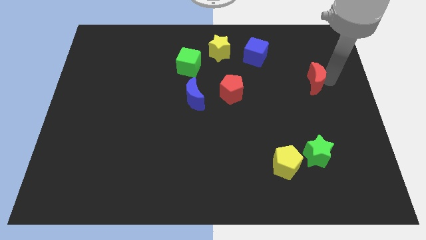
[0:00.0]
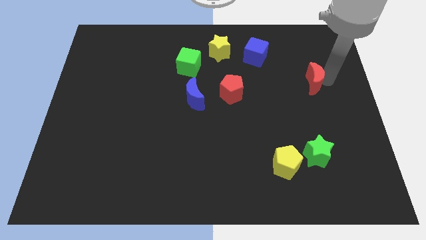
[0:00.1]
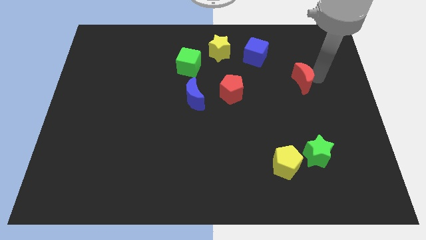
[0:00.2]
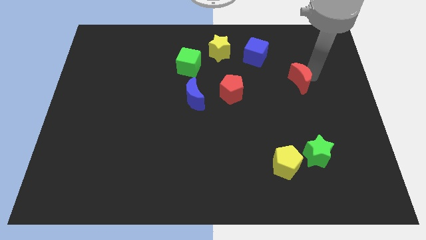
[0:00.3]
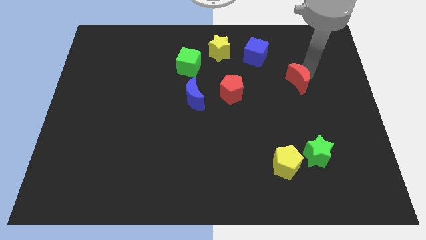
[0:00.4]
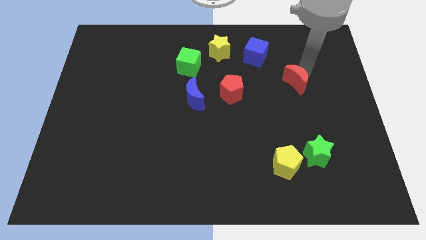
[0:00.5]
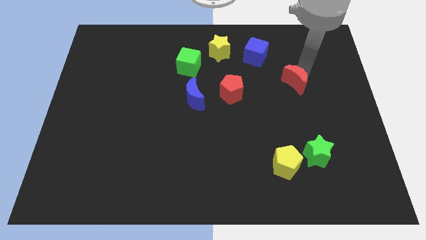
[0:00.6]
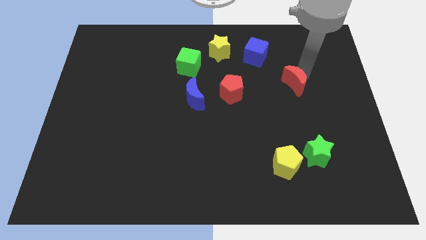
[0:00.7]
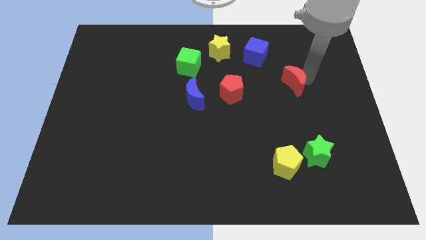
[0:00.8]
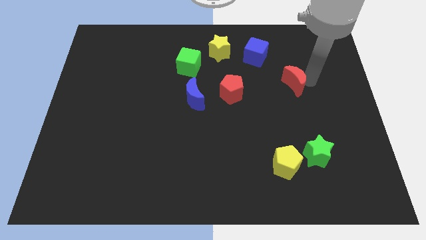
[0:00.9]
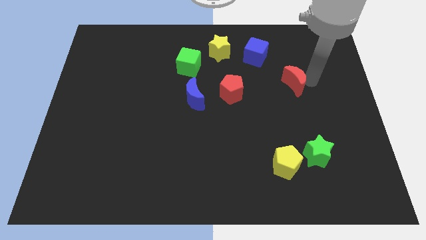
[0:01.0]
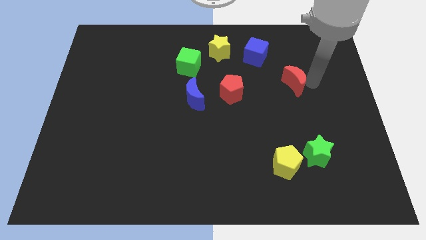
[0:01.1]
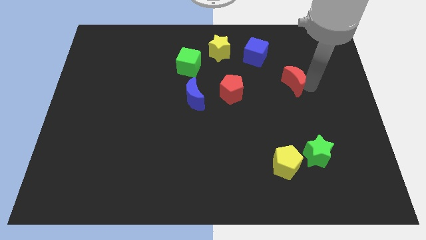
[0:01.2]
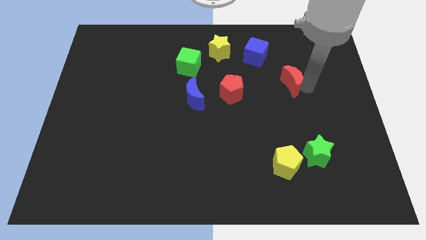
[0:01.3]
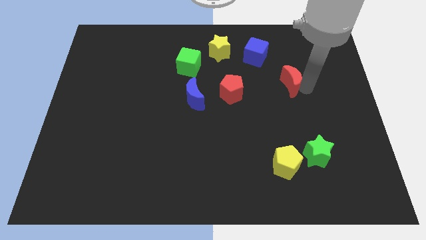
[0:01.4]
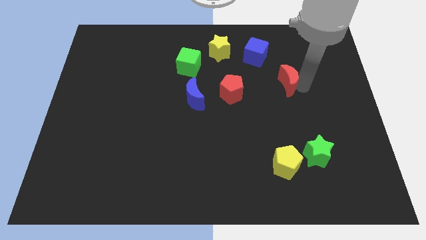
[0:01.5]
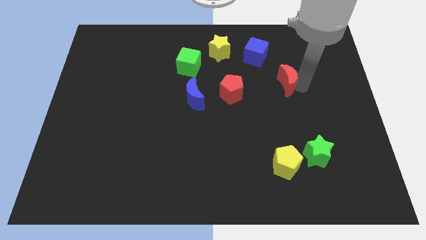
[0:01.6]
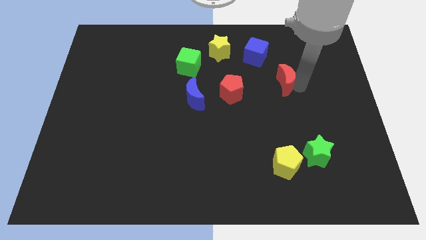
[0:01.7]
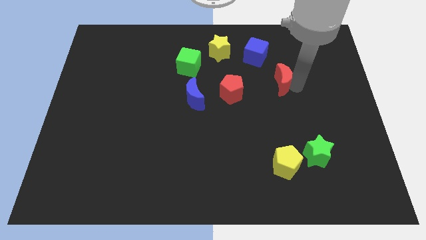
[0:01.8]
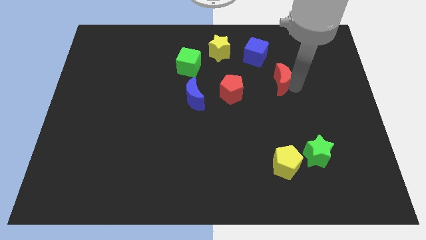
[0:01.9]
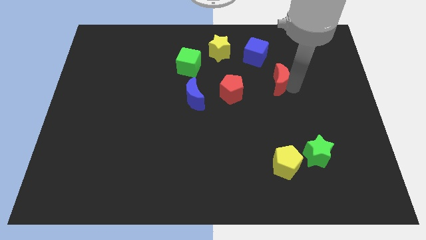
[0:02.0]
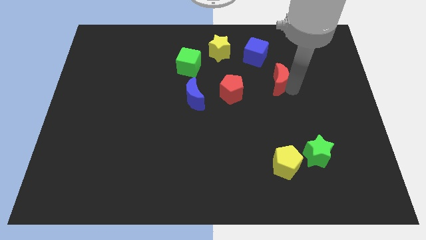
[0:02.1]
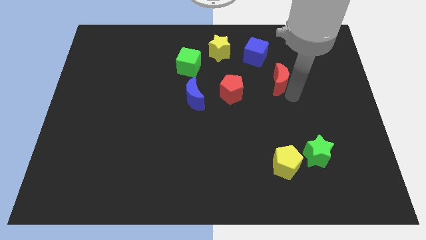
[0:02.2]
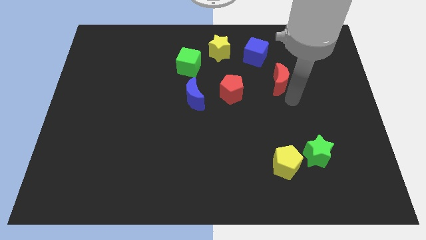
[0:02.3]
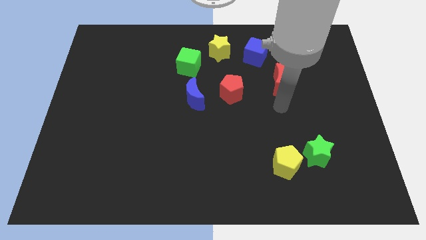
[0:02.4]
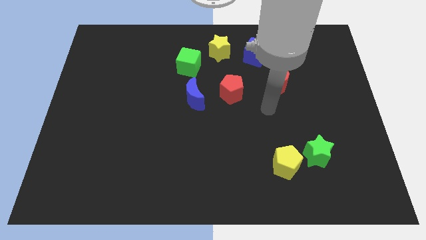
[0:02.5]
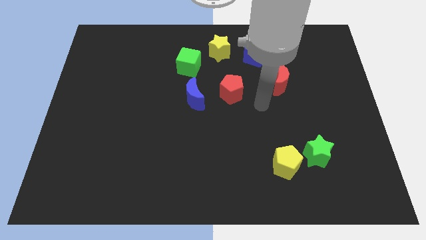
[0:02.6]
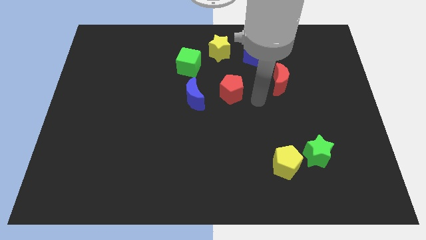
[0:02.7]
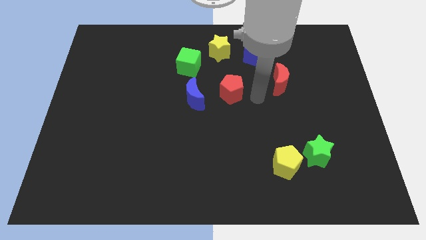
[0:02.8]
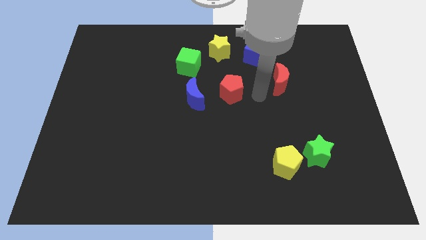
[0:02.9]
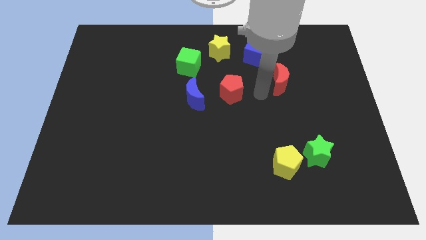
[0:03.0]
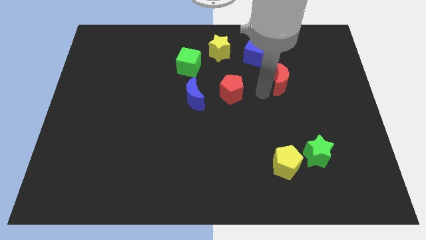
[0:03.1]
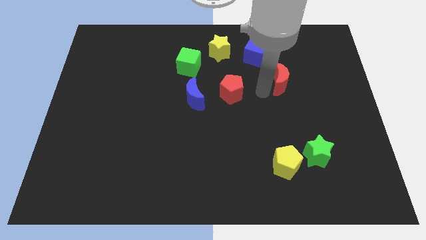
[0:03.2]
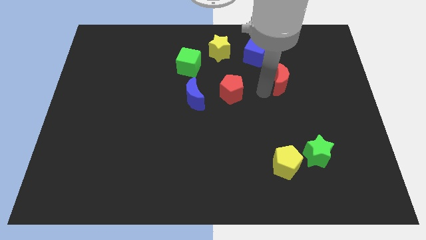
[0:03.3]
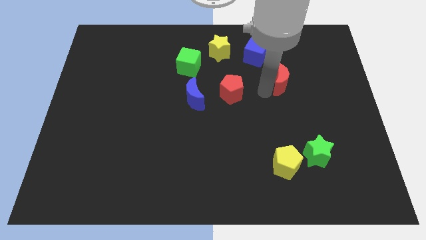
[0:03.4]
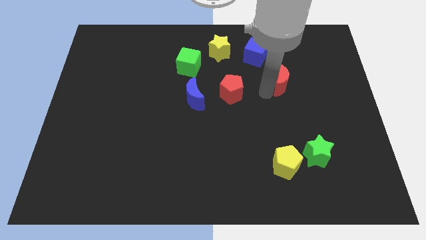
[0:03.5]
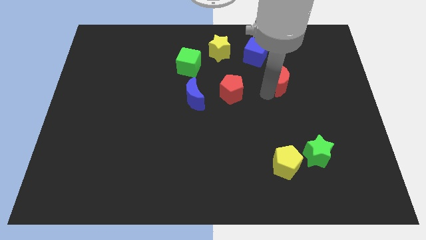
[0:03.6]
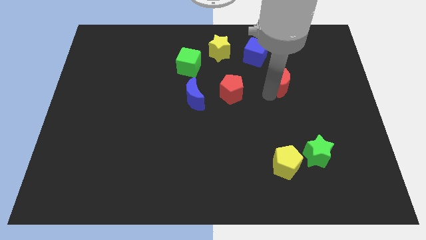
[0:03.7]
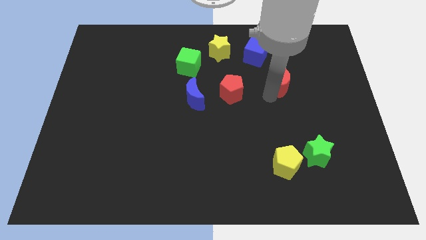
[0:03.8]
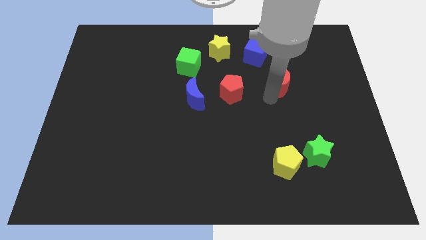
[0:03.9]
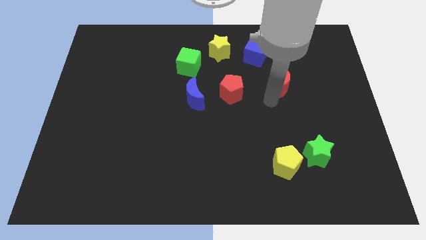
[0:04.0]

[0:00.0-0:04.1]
push red moon above yellow pentagon

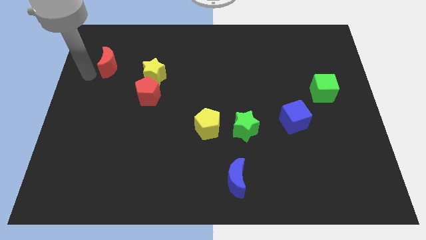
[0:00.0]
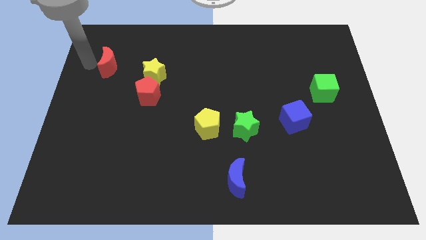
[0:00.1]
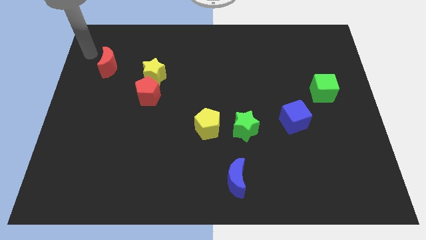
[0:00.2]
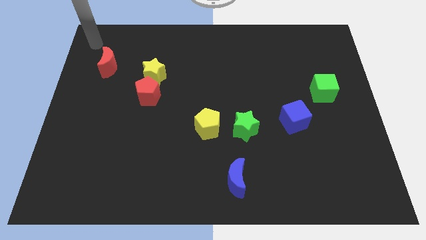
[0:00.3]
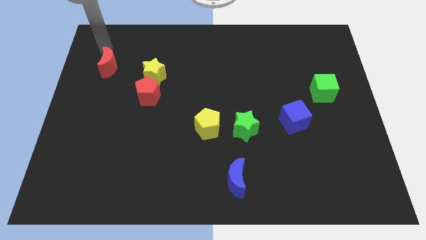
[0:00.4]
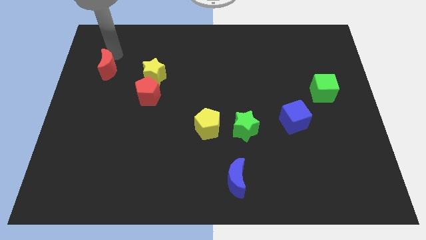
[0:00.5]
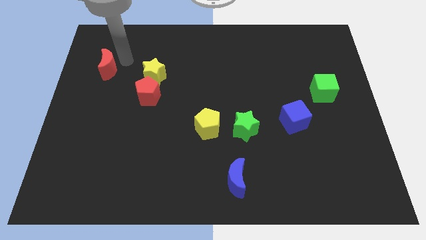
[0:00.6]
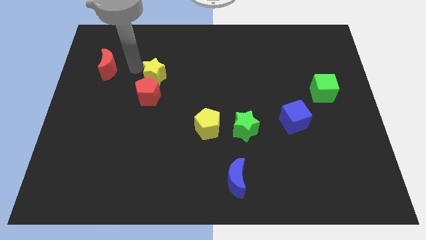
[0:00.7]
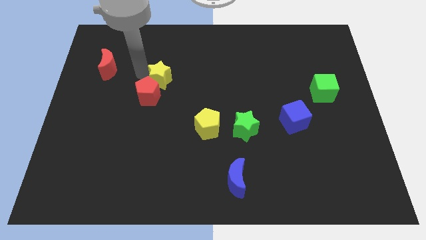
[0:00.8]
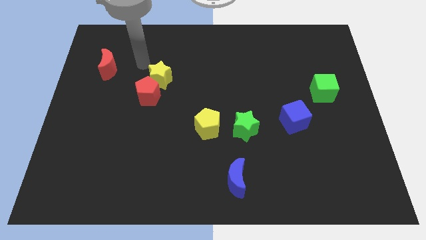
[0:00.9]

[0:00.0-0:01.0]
move the yellow star slightly to the right

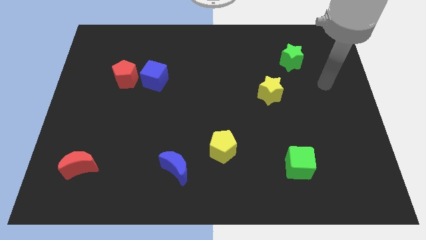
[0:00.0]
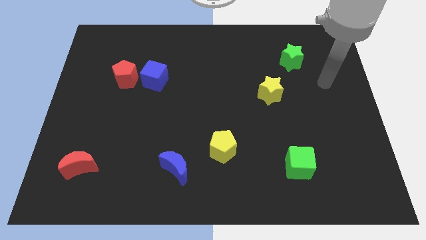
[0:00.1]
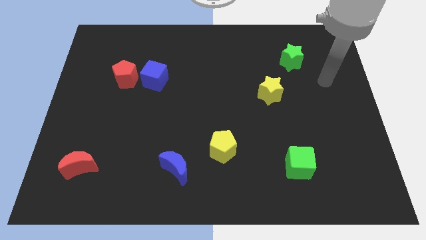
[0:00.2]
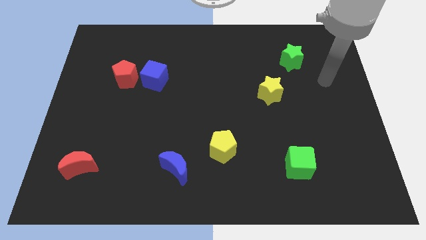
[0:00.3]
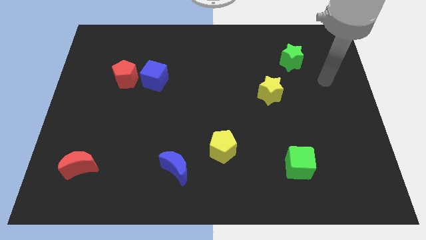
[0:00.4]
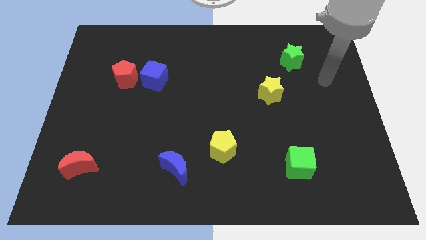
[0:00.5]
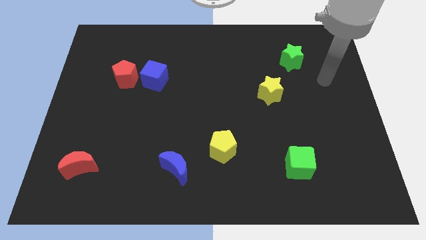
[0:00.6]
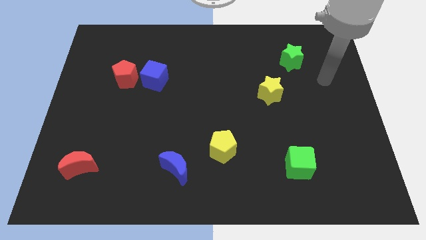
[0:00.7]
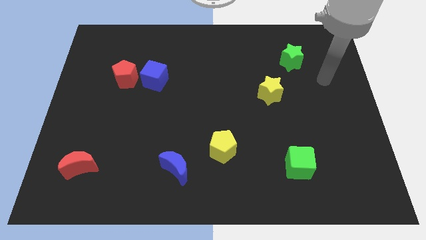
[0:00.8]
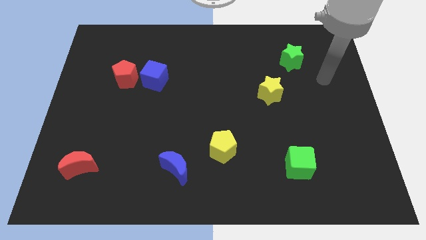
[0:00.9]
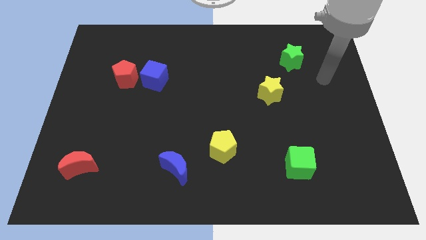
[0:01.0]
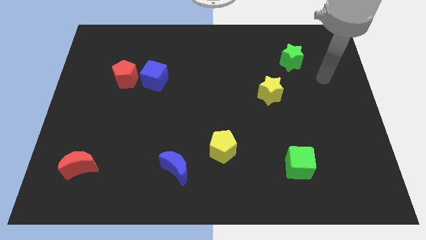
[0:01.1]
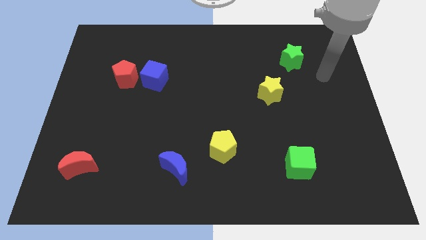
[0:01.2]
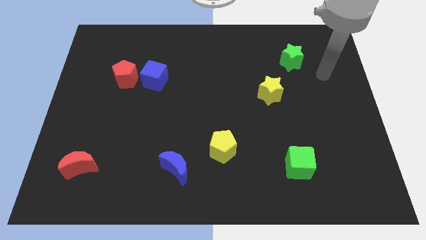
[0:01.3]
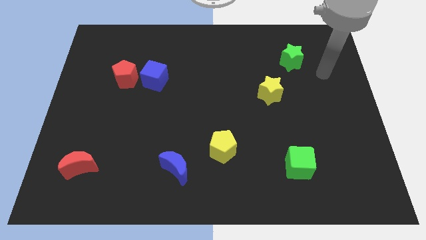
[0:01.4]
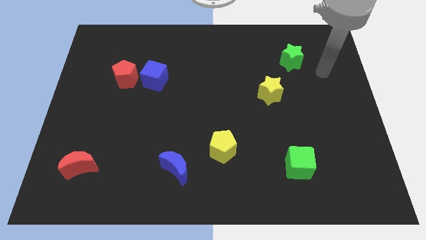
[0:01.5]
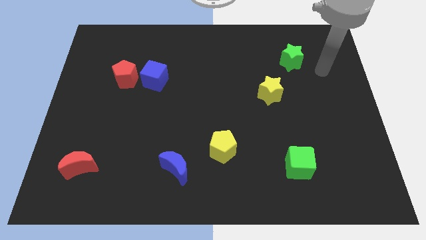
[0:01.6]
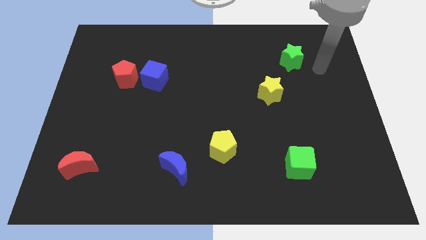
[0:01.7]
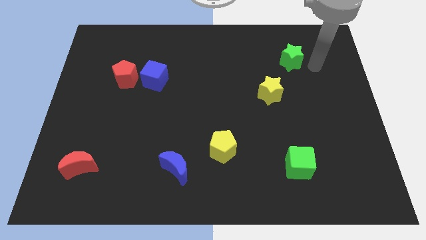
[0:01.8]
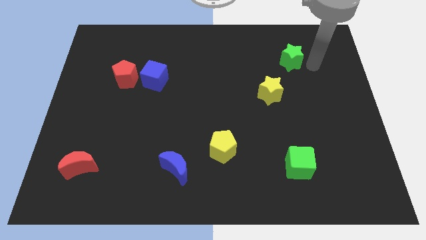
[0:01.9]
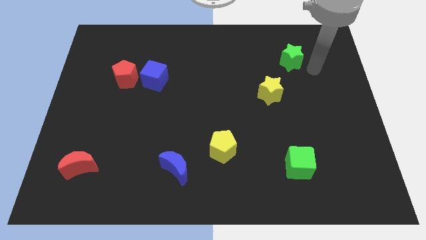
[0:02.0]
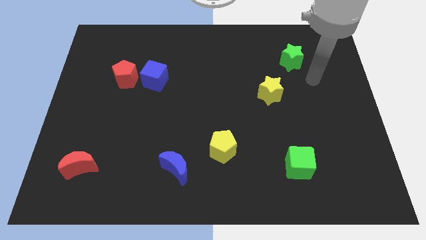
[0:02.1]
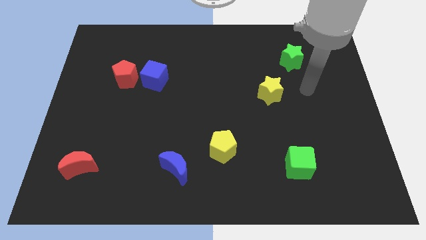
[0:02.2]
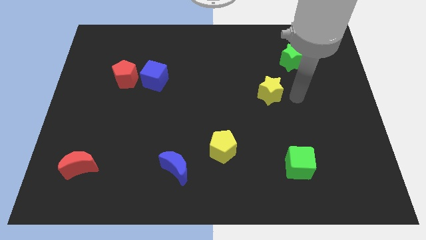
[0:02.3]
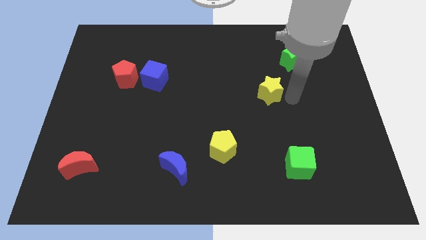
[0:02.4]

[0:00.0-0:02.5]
move your arm and point to the right of yellow star

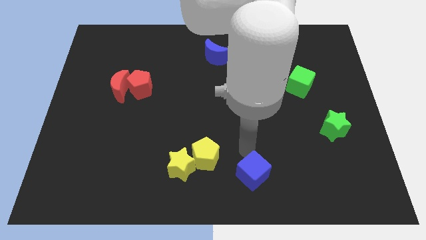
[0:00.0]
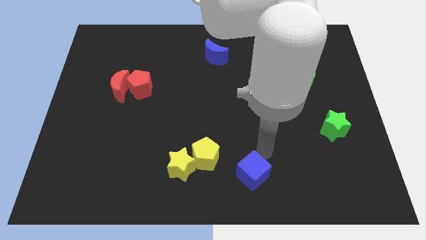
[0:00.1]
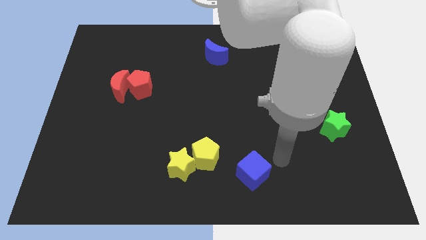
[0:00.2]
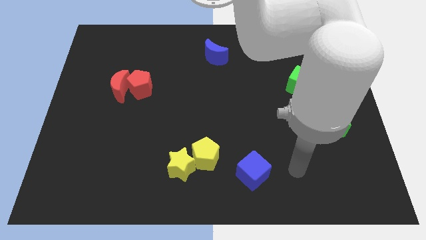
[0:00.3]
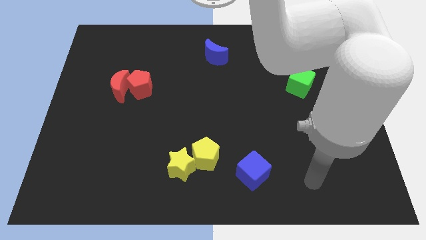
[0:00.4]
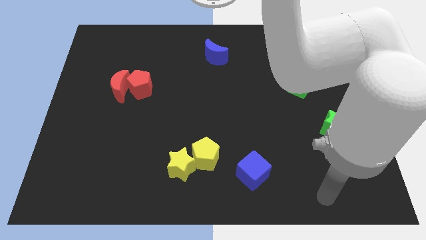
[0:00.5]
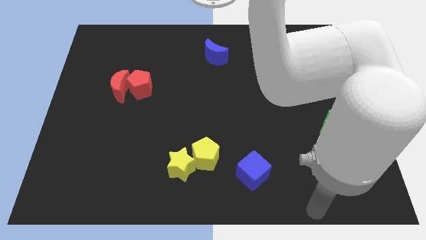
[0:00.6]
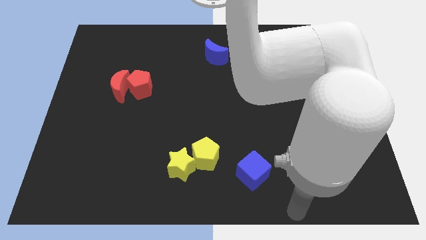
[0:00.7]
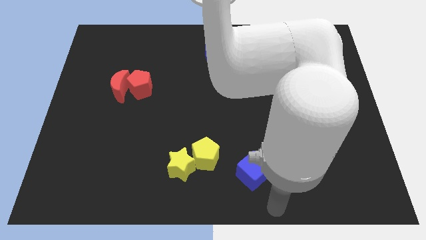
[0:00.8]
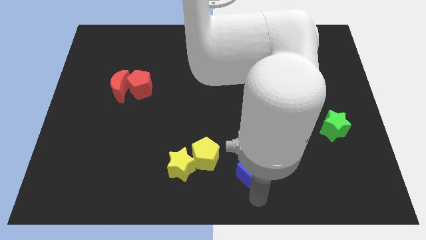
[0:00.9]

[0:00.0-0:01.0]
put your arm at the bottom of the blue cube

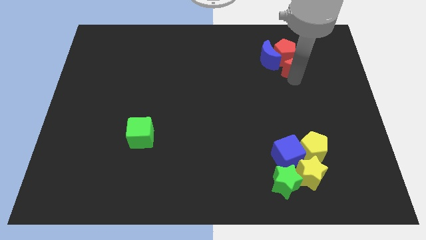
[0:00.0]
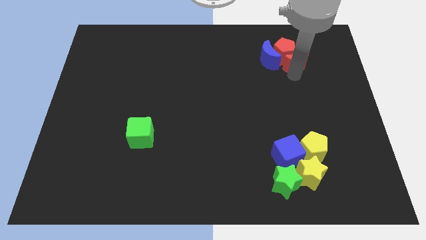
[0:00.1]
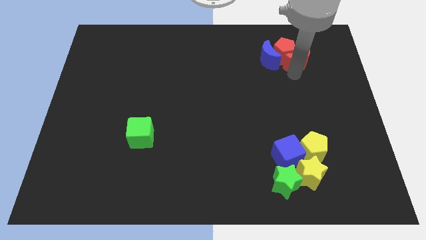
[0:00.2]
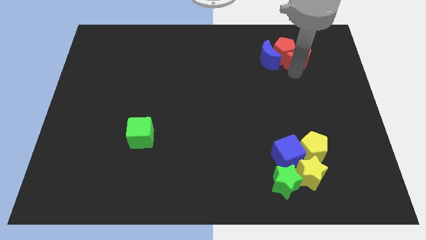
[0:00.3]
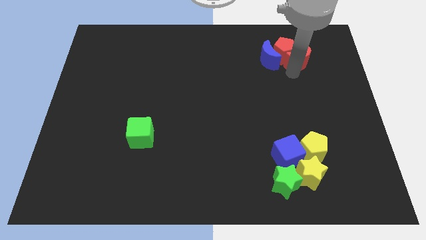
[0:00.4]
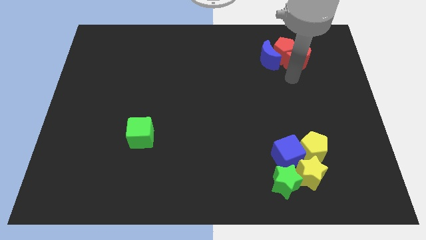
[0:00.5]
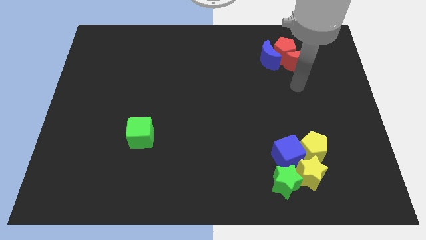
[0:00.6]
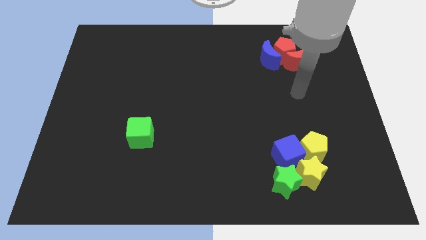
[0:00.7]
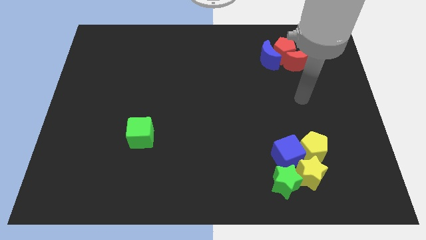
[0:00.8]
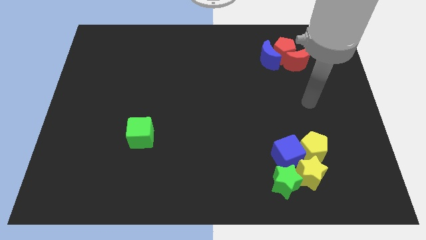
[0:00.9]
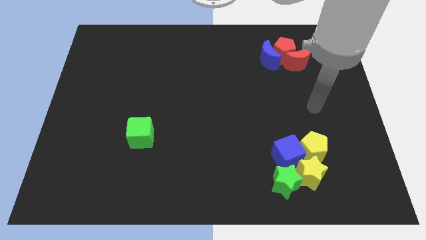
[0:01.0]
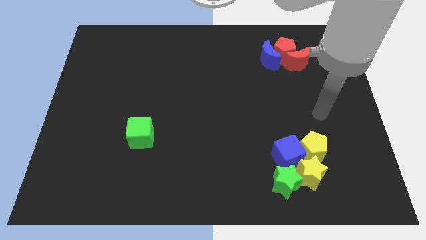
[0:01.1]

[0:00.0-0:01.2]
move red crescent into red pentagon
